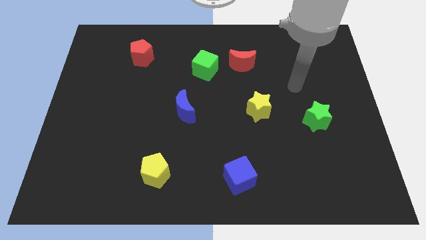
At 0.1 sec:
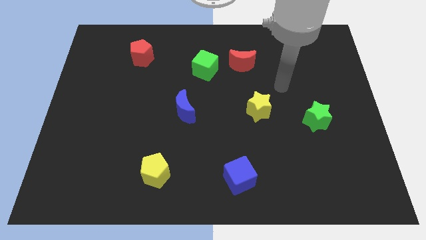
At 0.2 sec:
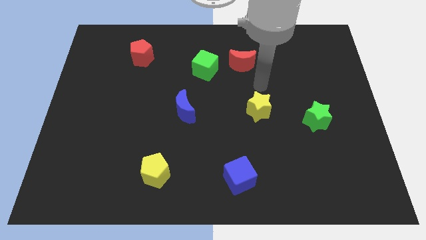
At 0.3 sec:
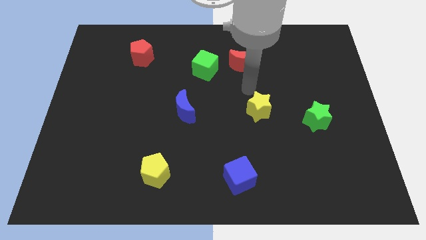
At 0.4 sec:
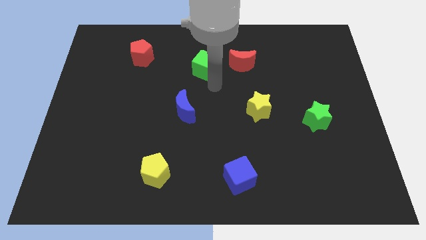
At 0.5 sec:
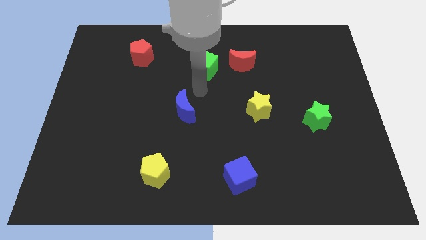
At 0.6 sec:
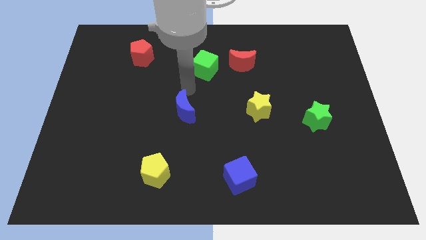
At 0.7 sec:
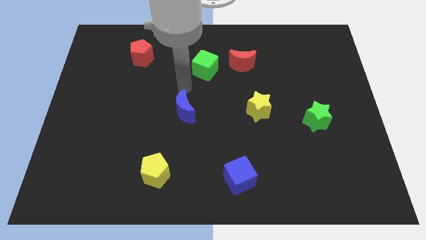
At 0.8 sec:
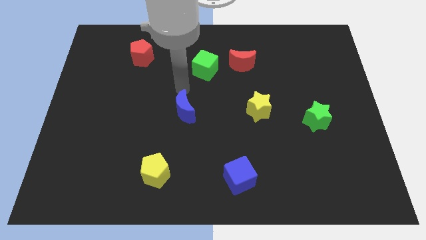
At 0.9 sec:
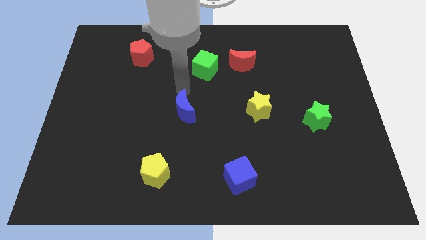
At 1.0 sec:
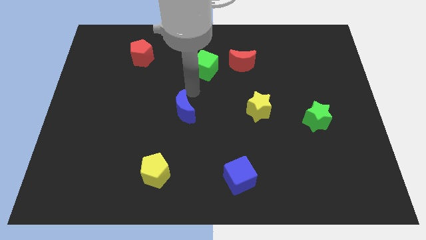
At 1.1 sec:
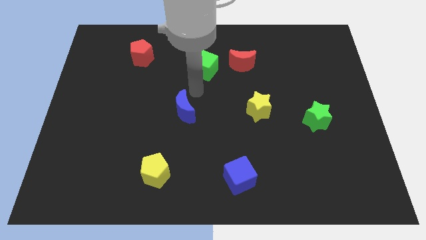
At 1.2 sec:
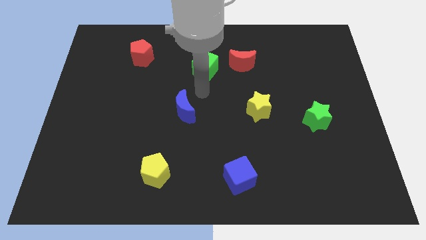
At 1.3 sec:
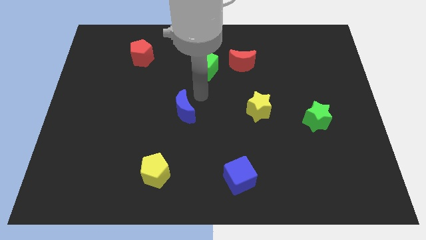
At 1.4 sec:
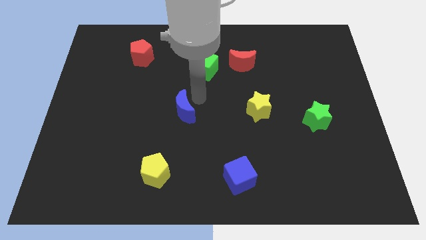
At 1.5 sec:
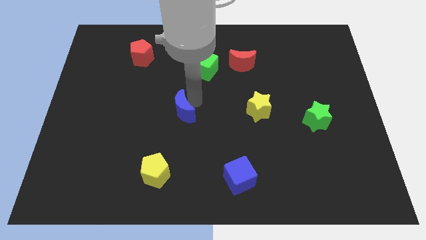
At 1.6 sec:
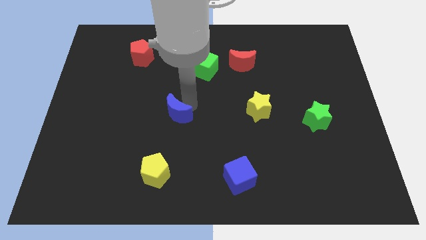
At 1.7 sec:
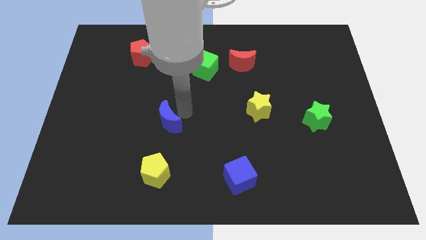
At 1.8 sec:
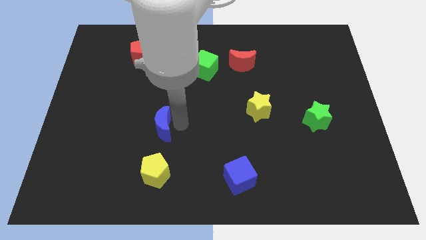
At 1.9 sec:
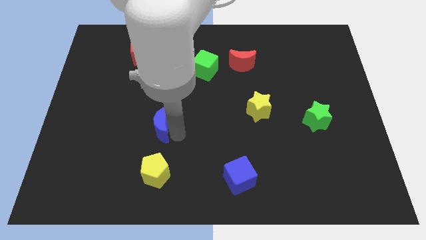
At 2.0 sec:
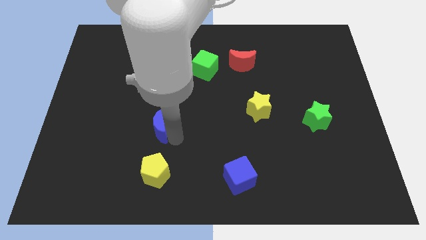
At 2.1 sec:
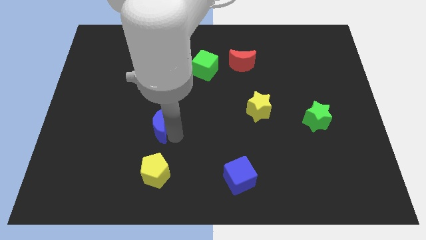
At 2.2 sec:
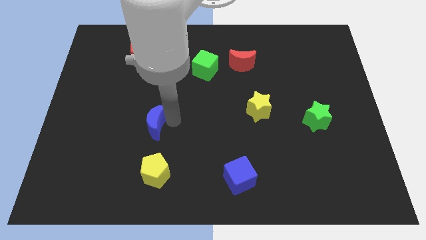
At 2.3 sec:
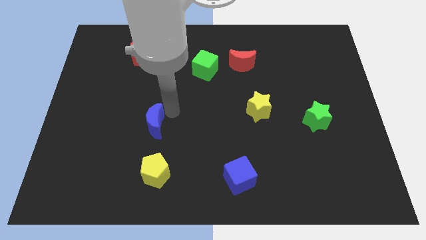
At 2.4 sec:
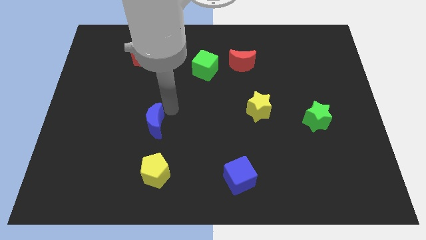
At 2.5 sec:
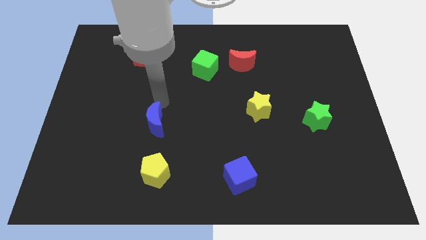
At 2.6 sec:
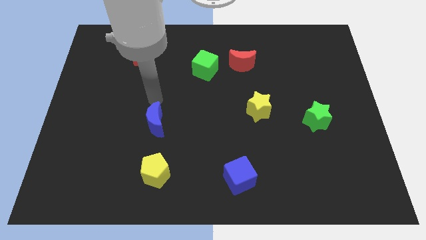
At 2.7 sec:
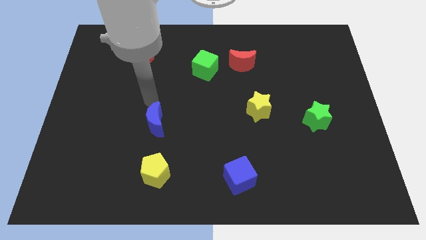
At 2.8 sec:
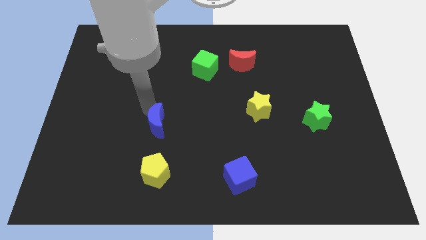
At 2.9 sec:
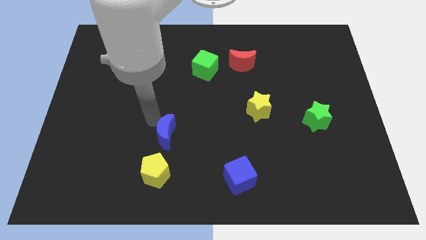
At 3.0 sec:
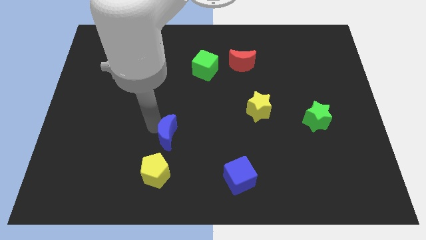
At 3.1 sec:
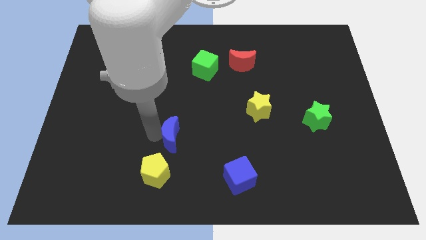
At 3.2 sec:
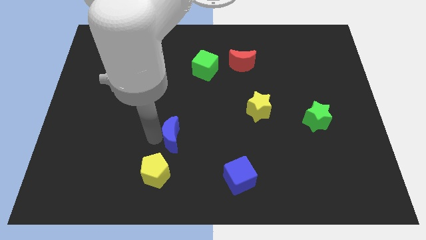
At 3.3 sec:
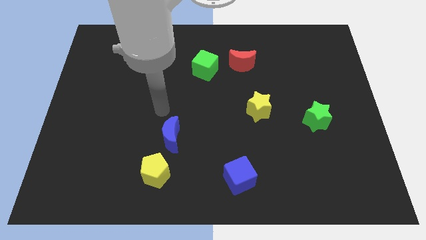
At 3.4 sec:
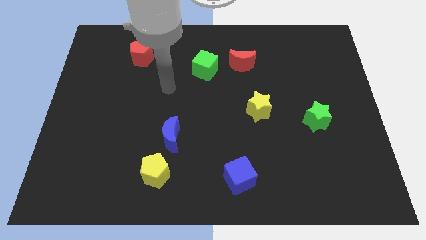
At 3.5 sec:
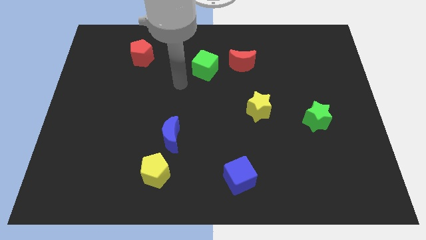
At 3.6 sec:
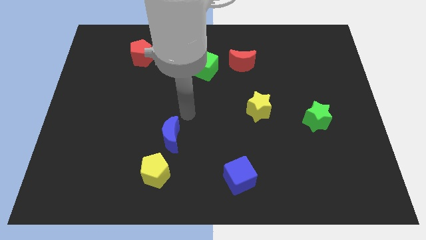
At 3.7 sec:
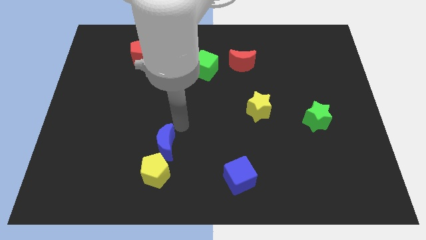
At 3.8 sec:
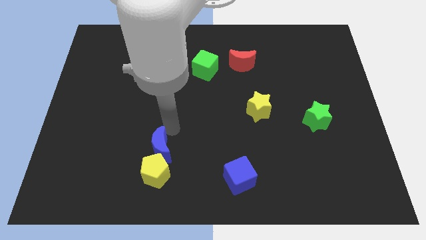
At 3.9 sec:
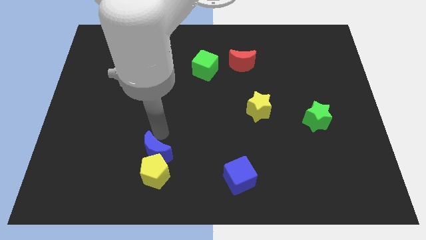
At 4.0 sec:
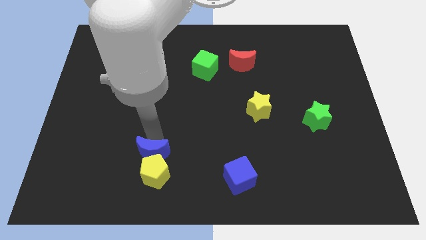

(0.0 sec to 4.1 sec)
move the blue moon close to the yellow pentagon

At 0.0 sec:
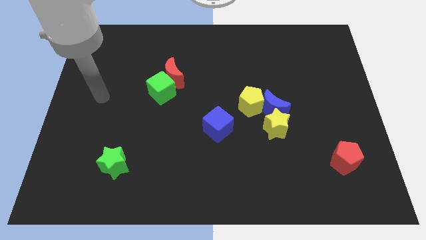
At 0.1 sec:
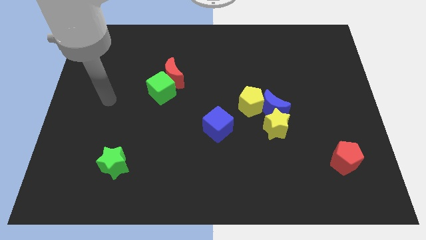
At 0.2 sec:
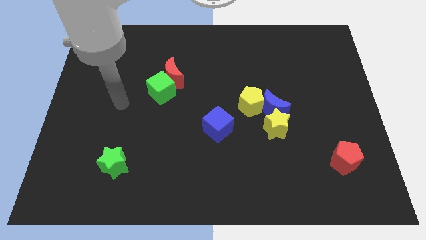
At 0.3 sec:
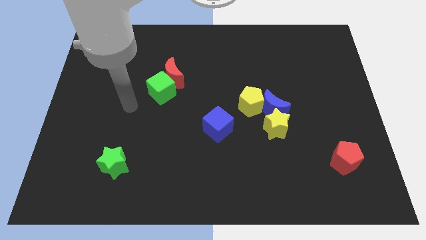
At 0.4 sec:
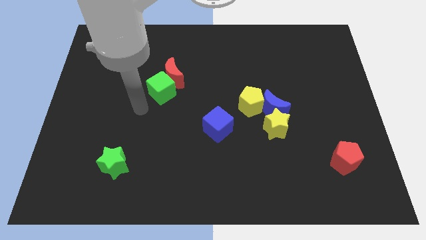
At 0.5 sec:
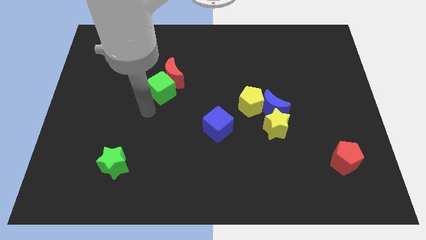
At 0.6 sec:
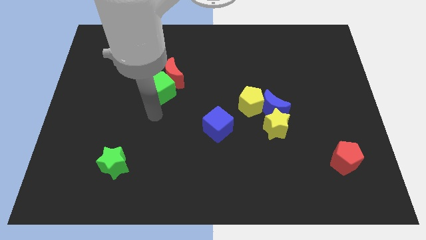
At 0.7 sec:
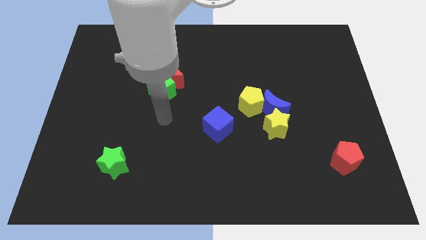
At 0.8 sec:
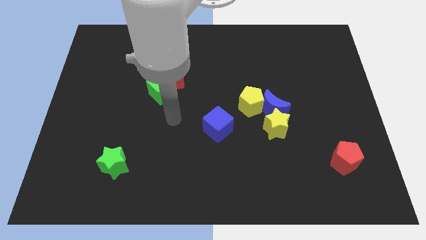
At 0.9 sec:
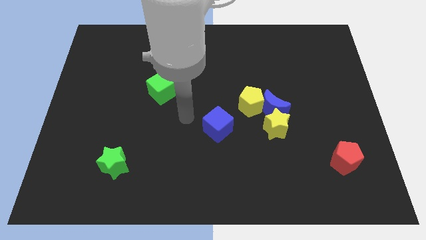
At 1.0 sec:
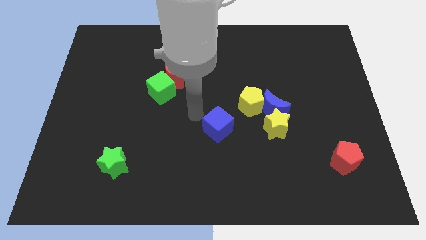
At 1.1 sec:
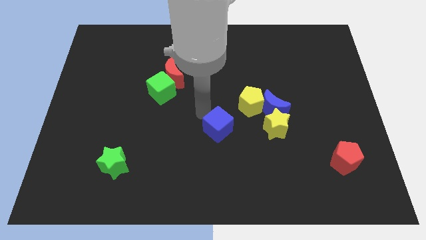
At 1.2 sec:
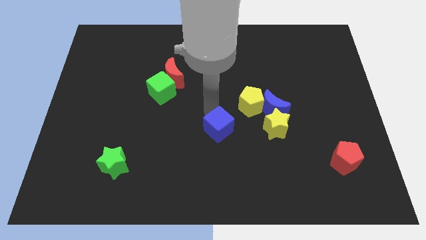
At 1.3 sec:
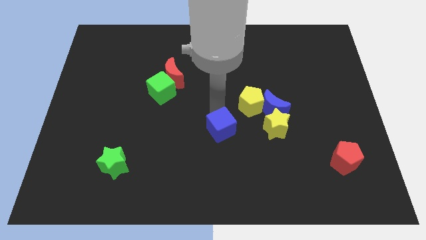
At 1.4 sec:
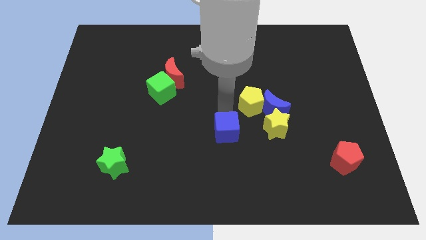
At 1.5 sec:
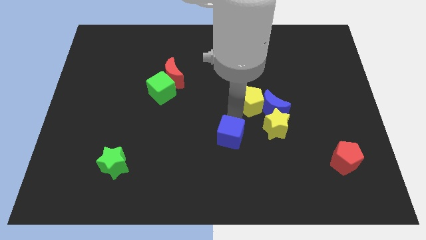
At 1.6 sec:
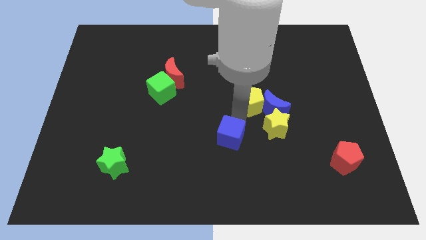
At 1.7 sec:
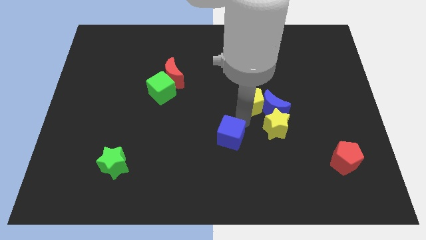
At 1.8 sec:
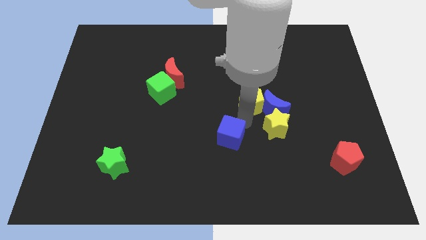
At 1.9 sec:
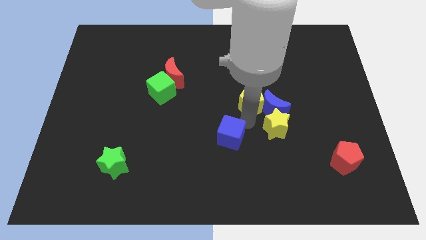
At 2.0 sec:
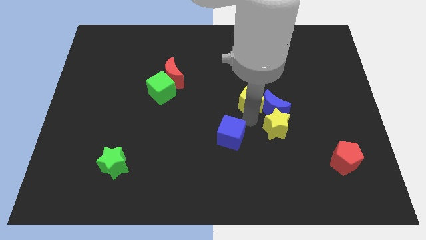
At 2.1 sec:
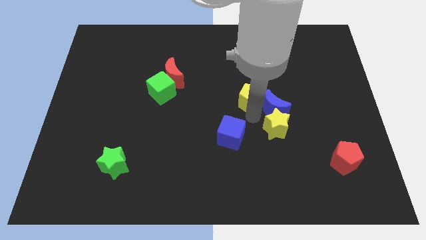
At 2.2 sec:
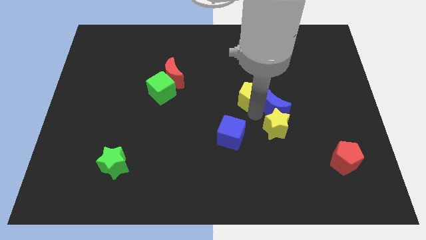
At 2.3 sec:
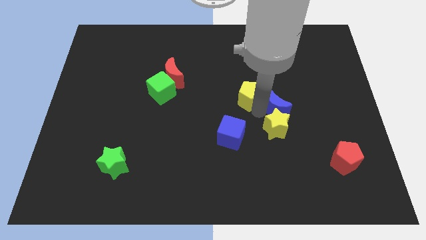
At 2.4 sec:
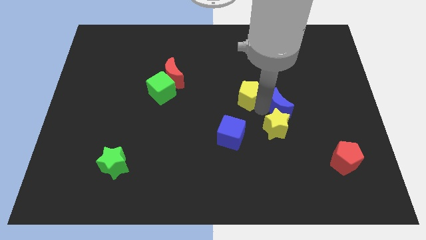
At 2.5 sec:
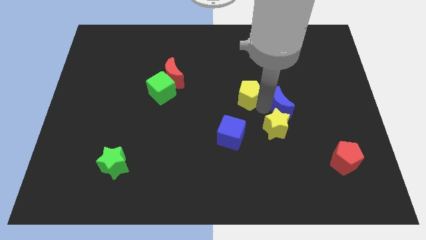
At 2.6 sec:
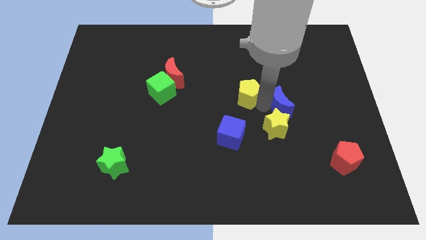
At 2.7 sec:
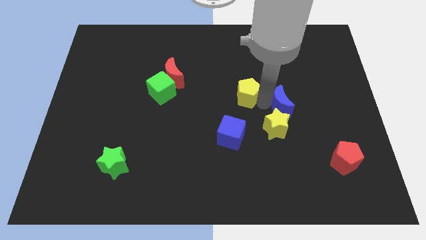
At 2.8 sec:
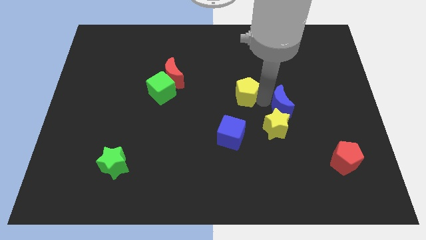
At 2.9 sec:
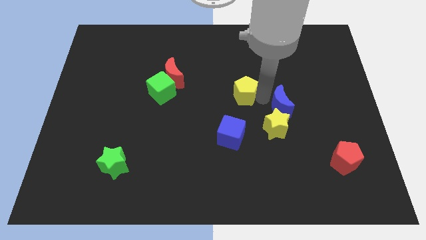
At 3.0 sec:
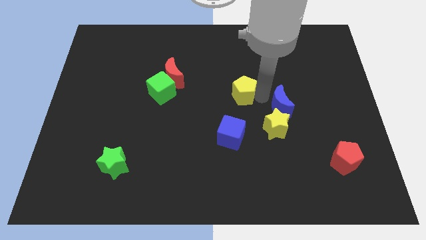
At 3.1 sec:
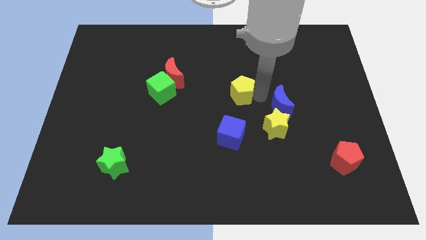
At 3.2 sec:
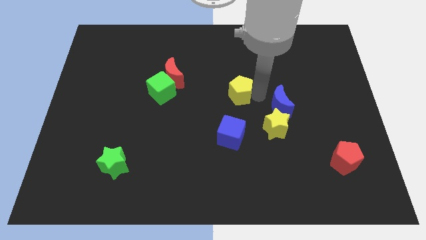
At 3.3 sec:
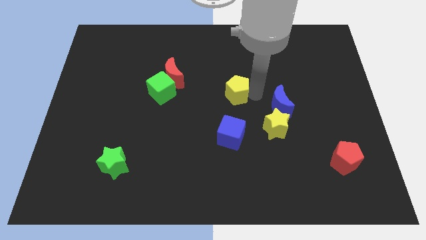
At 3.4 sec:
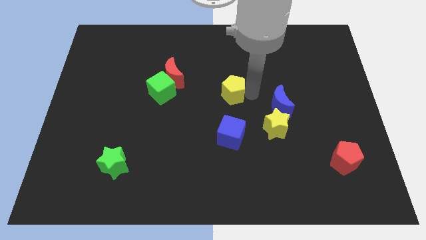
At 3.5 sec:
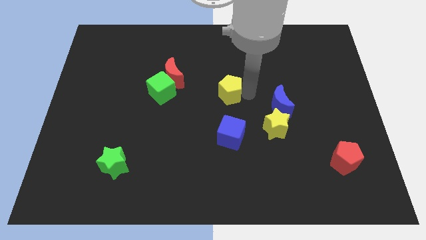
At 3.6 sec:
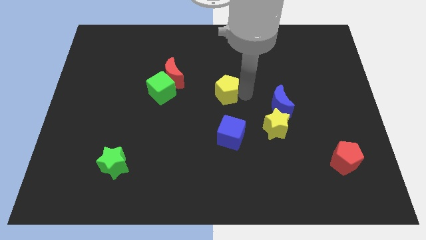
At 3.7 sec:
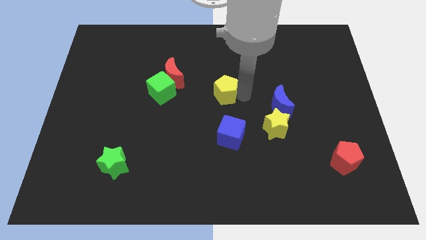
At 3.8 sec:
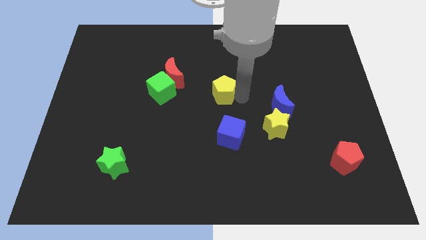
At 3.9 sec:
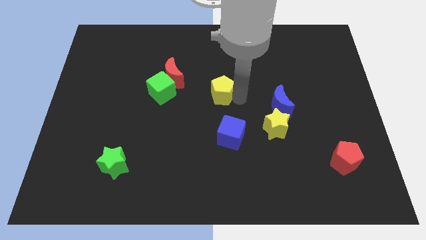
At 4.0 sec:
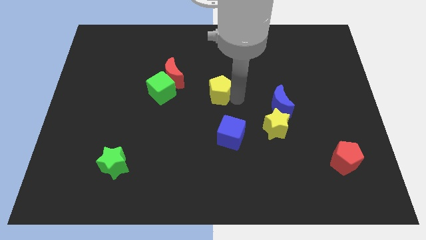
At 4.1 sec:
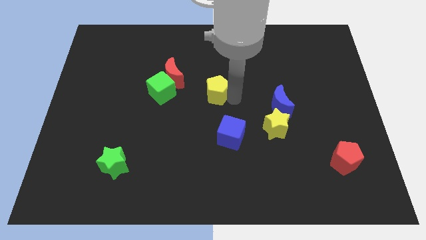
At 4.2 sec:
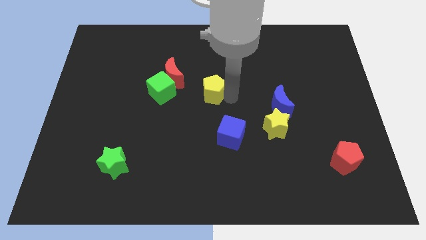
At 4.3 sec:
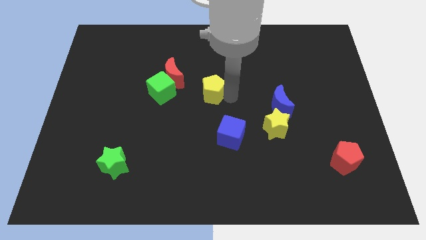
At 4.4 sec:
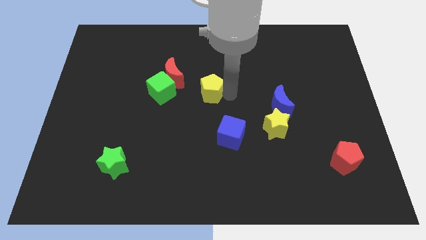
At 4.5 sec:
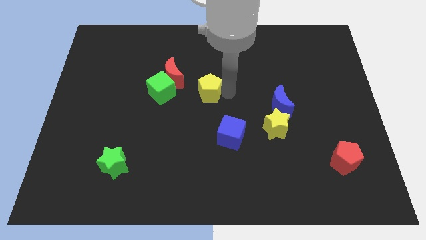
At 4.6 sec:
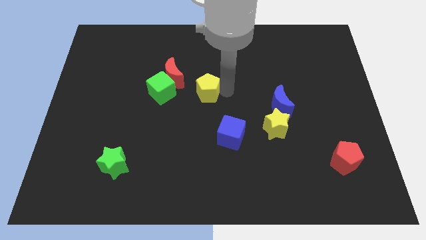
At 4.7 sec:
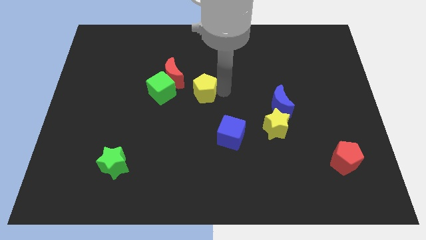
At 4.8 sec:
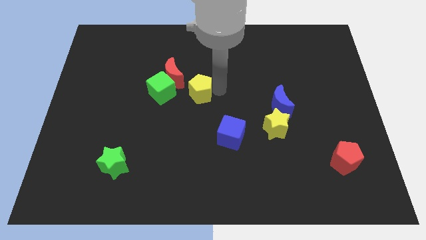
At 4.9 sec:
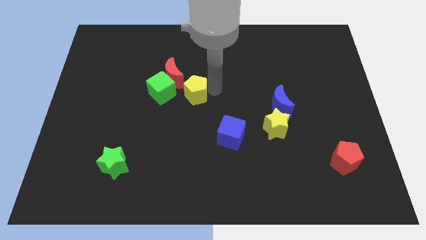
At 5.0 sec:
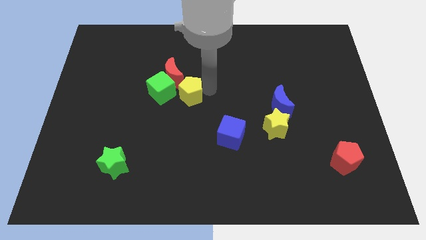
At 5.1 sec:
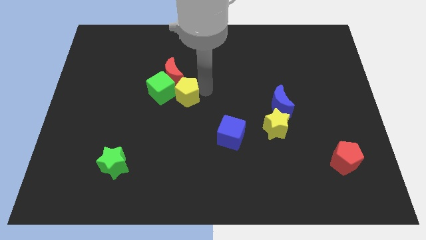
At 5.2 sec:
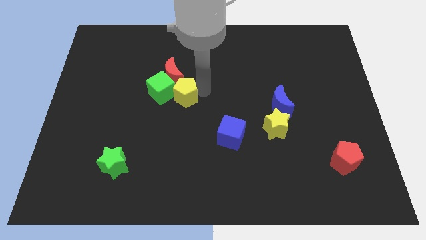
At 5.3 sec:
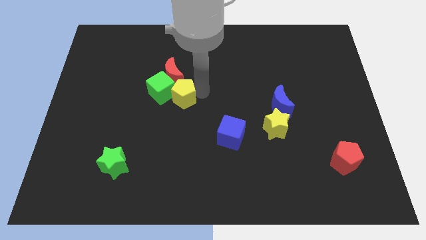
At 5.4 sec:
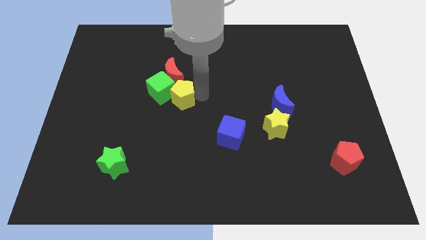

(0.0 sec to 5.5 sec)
move the yellow pentagon close to the green cube
